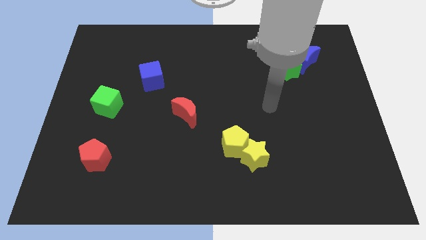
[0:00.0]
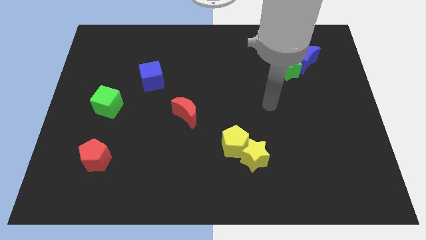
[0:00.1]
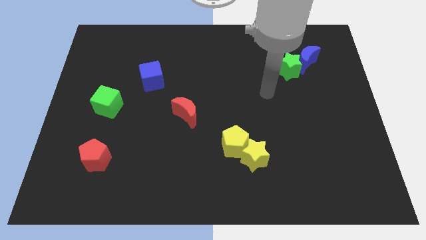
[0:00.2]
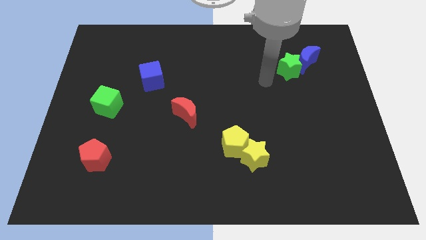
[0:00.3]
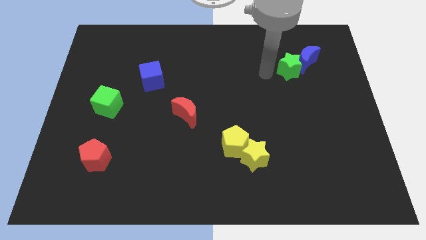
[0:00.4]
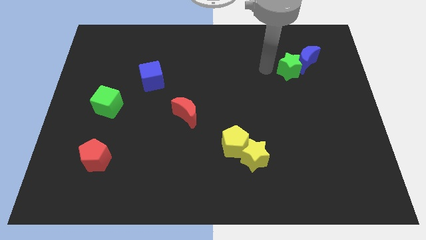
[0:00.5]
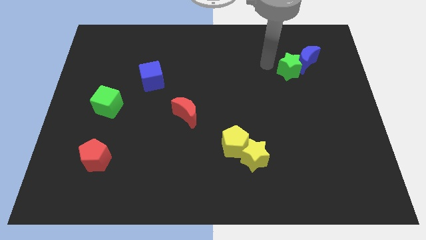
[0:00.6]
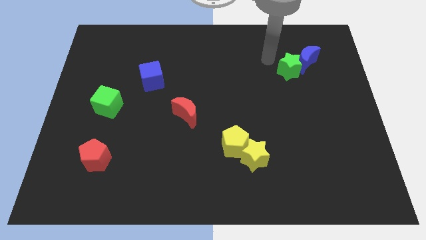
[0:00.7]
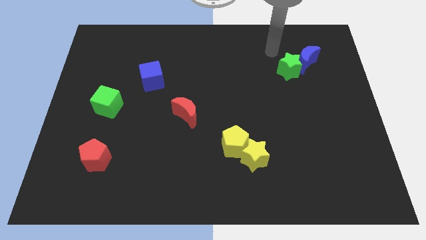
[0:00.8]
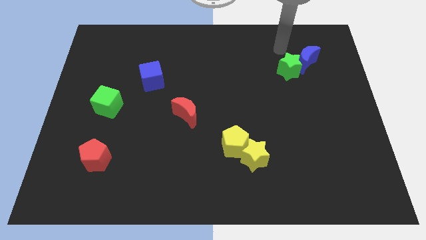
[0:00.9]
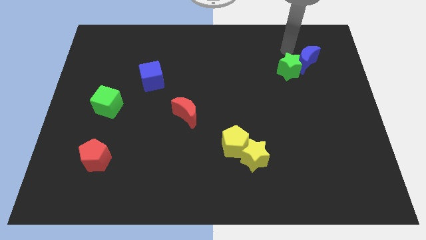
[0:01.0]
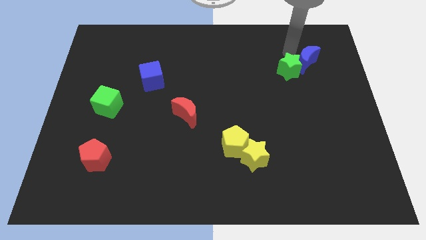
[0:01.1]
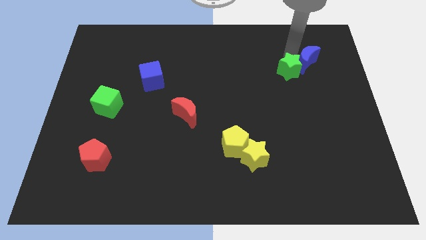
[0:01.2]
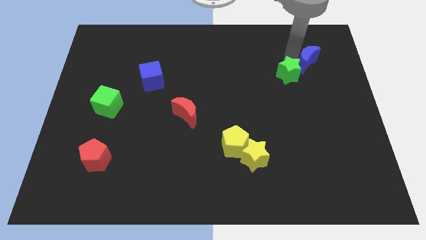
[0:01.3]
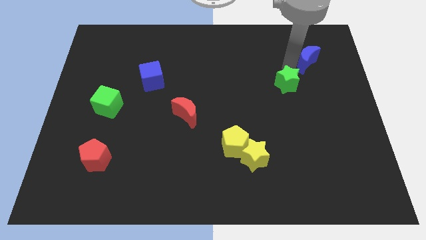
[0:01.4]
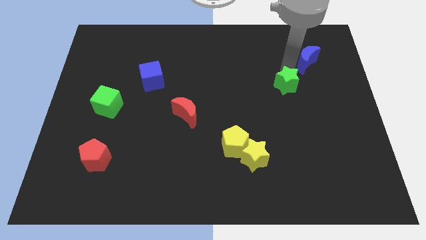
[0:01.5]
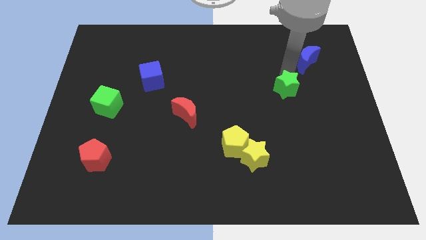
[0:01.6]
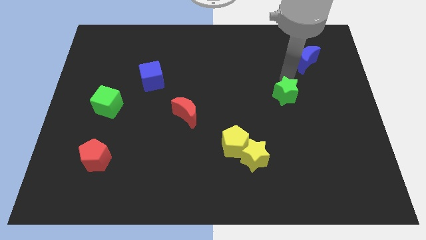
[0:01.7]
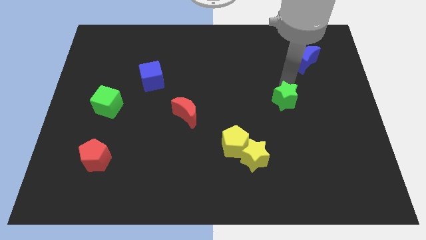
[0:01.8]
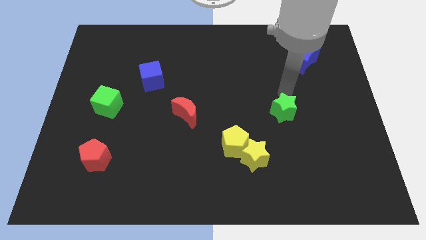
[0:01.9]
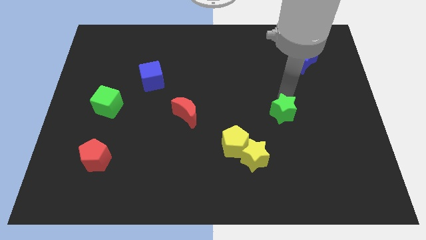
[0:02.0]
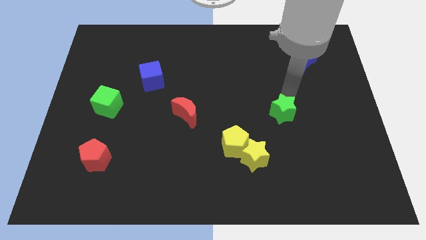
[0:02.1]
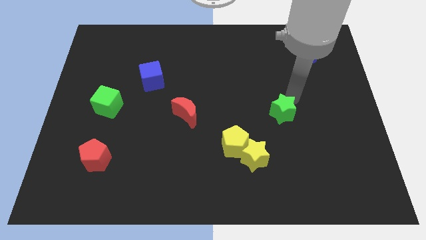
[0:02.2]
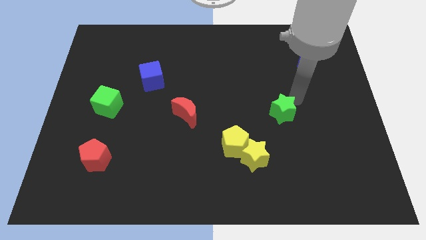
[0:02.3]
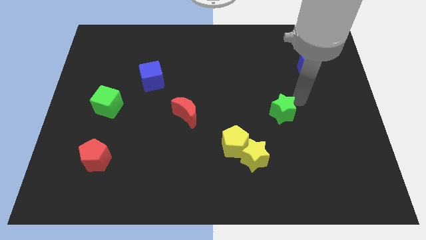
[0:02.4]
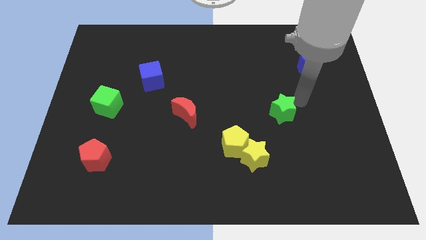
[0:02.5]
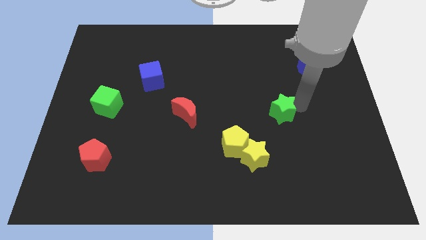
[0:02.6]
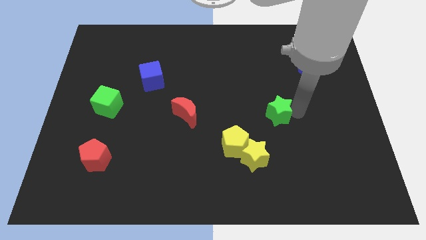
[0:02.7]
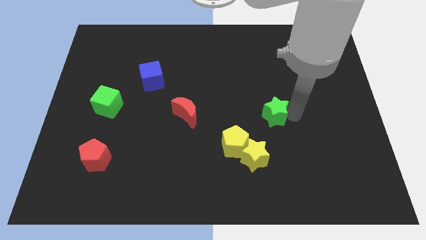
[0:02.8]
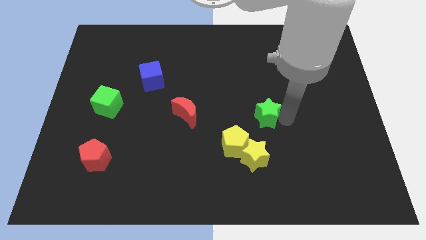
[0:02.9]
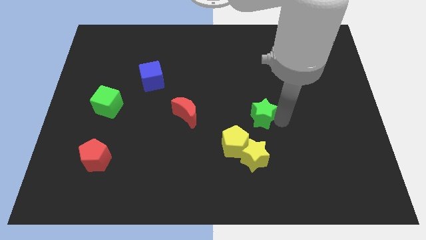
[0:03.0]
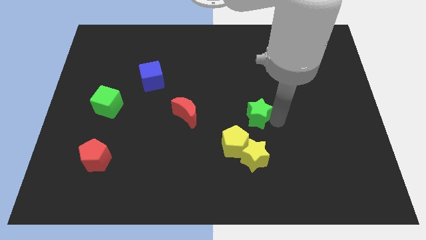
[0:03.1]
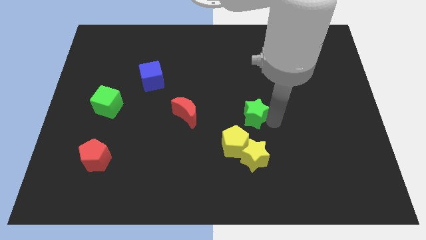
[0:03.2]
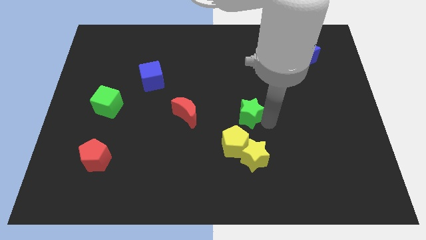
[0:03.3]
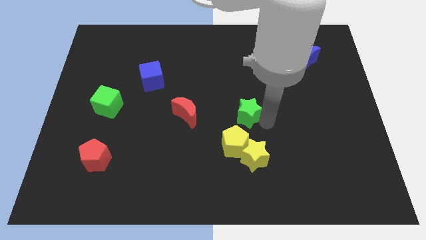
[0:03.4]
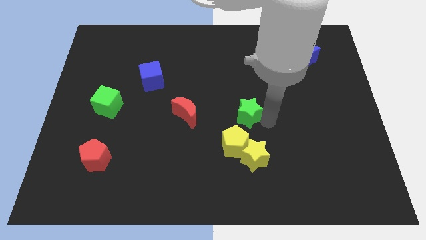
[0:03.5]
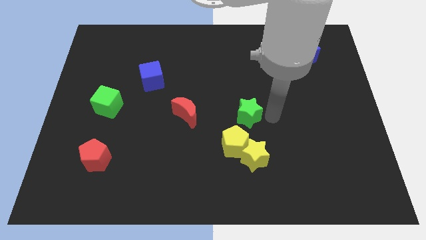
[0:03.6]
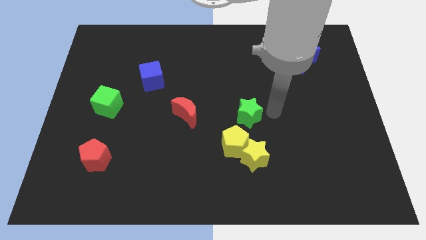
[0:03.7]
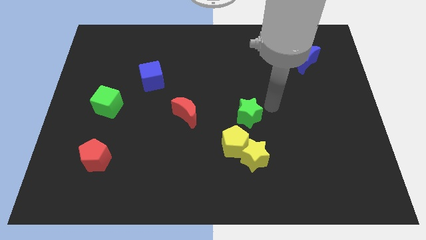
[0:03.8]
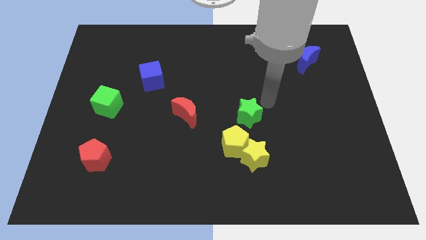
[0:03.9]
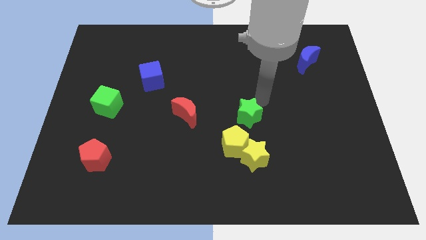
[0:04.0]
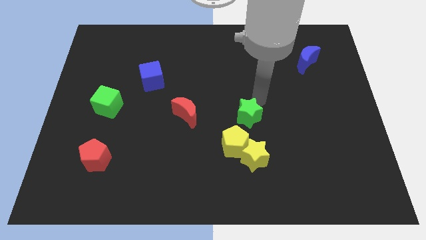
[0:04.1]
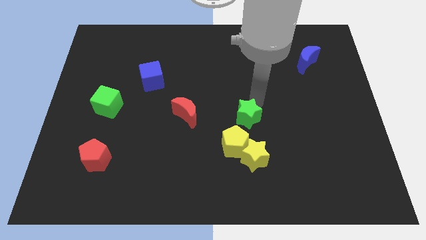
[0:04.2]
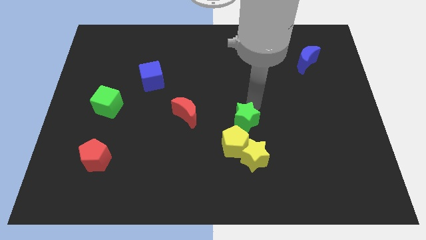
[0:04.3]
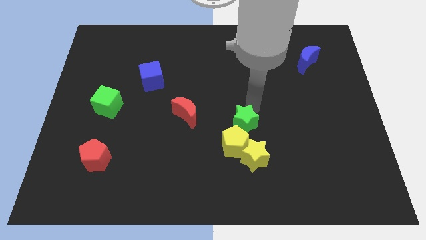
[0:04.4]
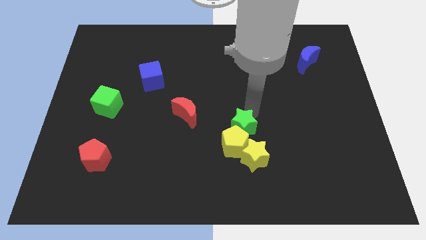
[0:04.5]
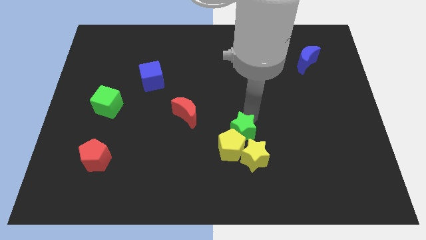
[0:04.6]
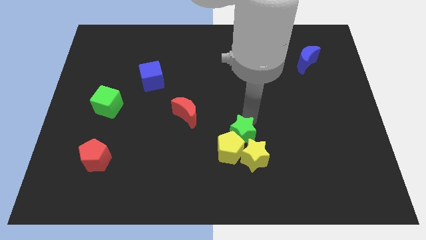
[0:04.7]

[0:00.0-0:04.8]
slide the green star close to the yellow pentagon

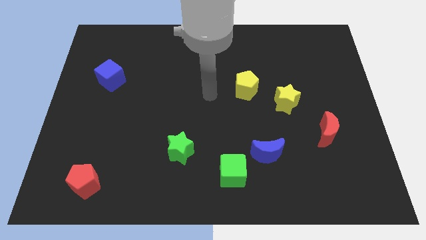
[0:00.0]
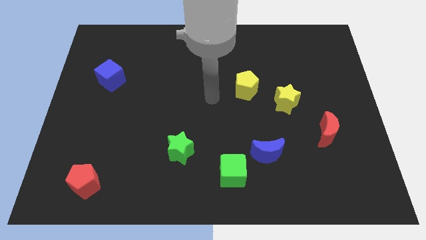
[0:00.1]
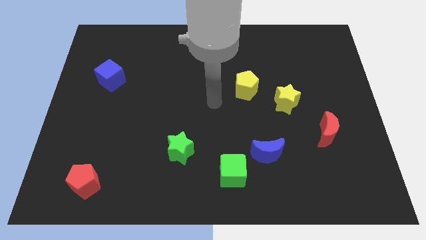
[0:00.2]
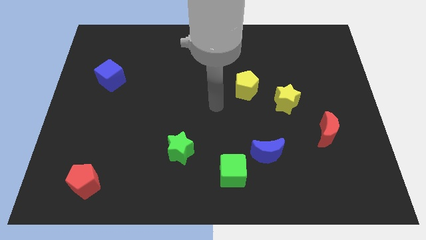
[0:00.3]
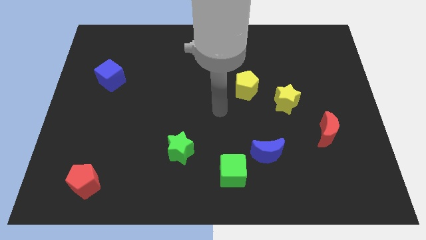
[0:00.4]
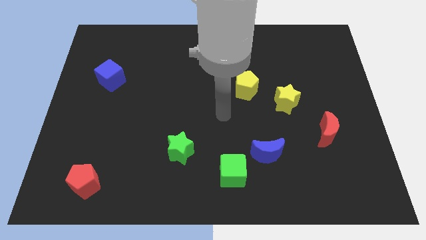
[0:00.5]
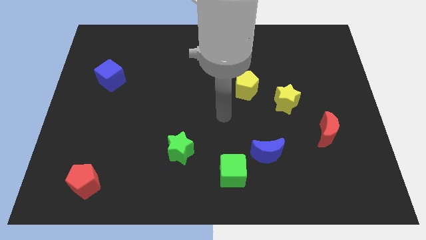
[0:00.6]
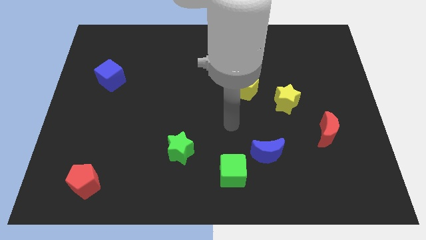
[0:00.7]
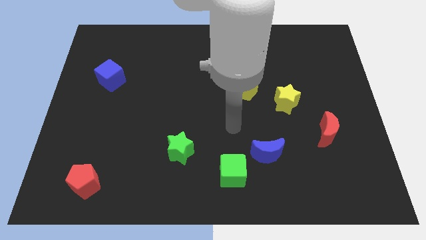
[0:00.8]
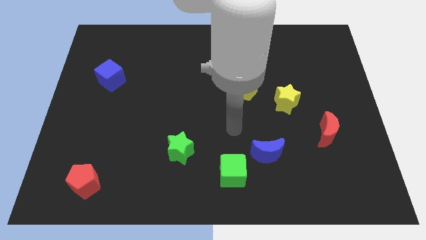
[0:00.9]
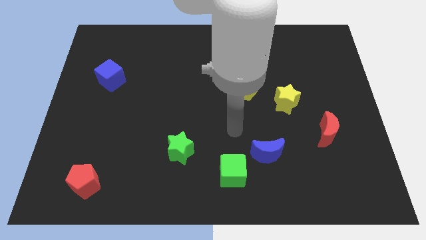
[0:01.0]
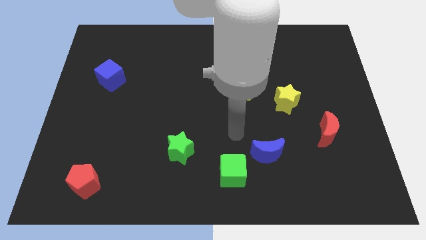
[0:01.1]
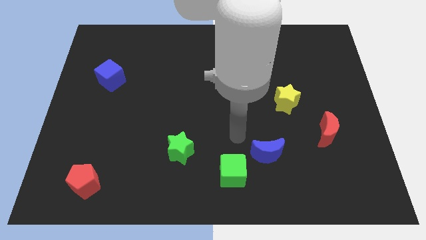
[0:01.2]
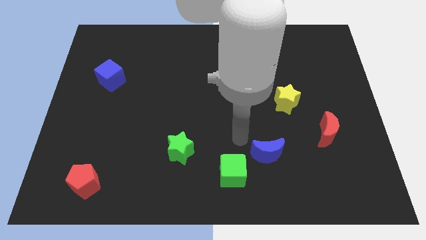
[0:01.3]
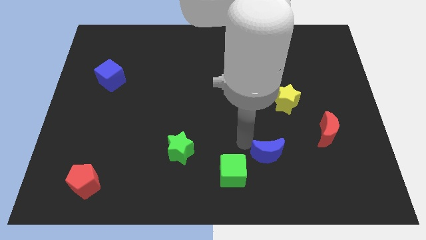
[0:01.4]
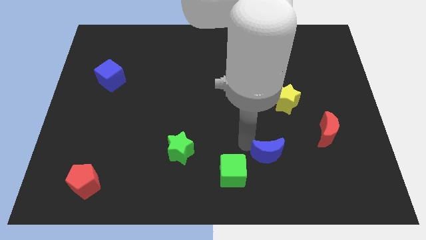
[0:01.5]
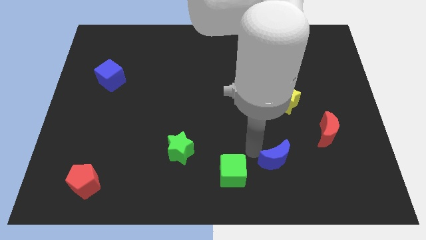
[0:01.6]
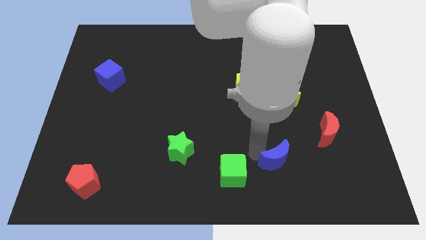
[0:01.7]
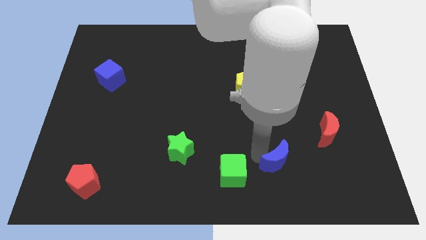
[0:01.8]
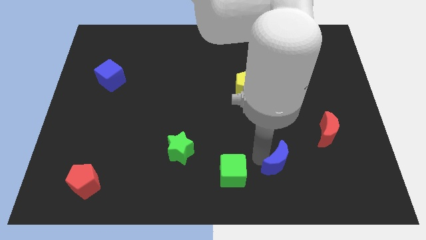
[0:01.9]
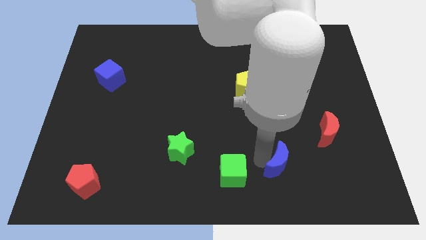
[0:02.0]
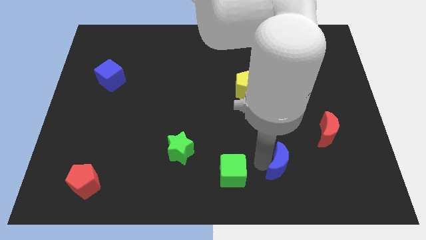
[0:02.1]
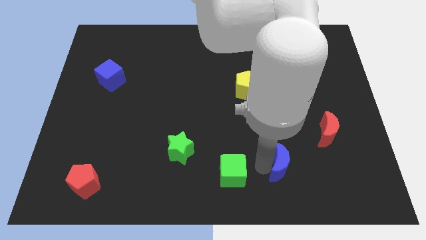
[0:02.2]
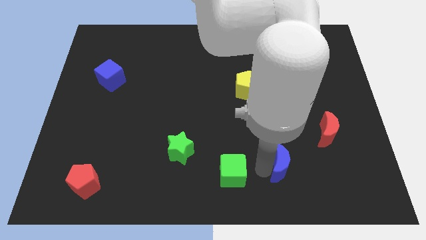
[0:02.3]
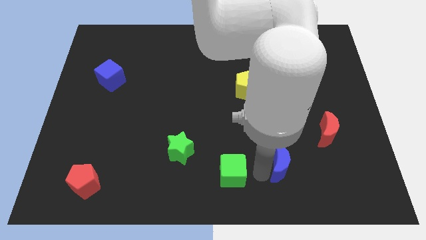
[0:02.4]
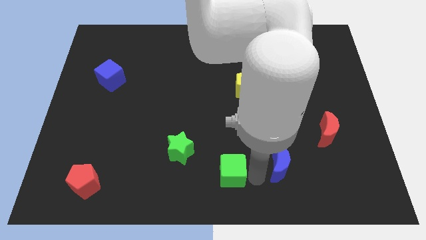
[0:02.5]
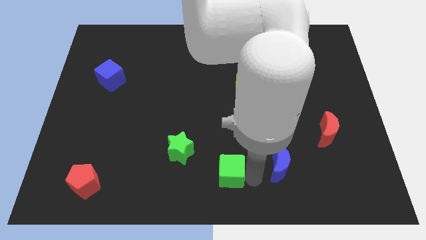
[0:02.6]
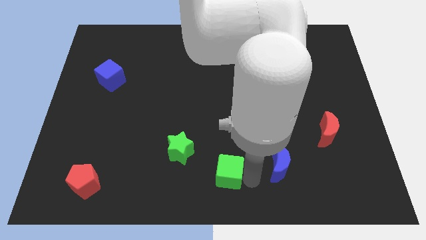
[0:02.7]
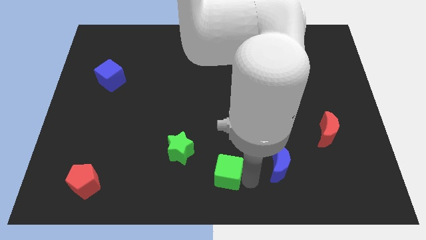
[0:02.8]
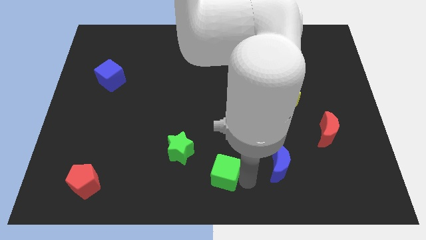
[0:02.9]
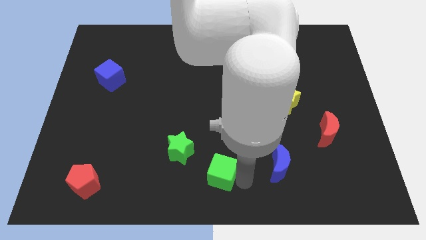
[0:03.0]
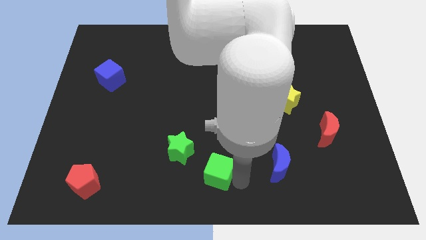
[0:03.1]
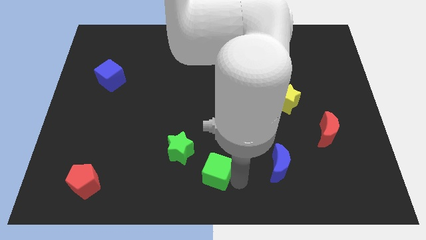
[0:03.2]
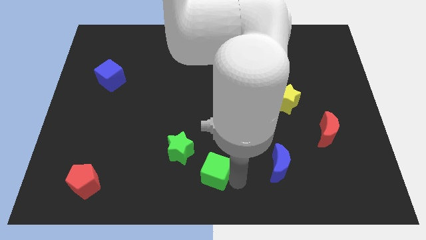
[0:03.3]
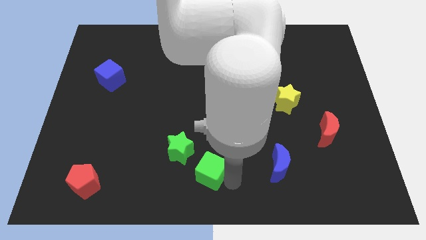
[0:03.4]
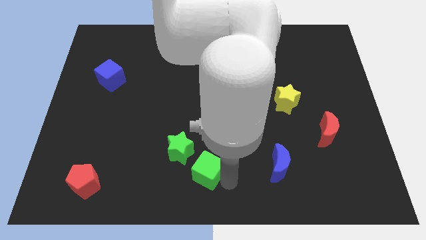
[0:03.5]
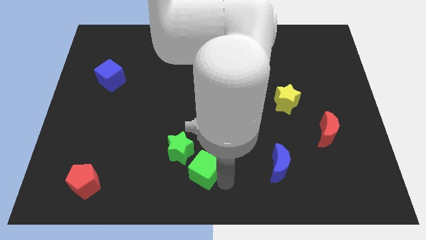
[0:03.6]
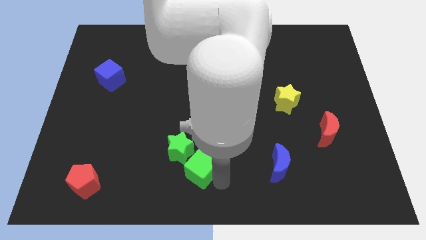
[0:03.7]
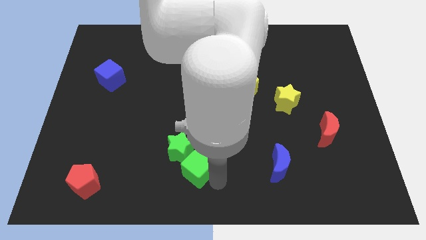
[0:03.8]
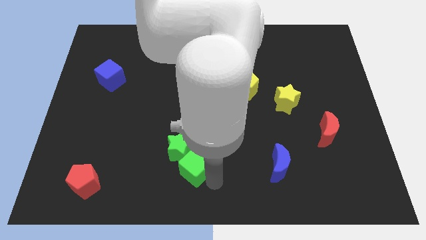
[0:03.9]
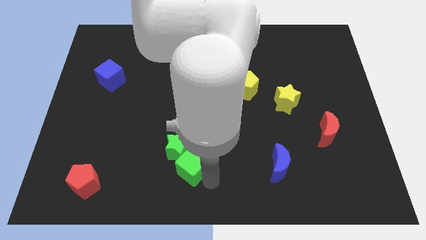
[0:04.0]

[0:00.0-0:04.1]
move the green cube close to the green star
